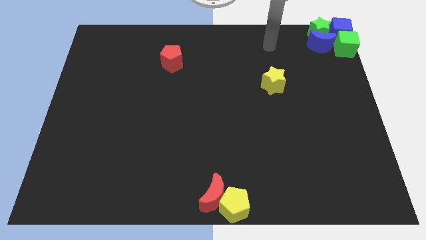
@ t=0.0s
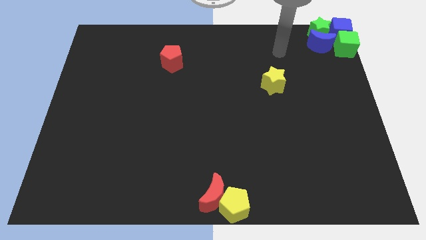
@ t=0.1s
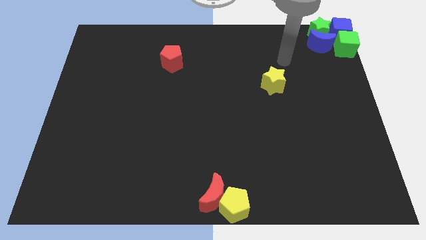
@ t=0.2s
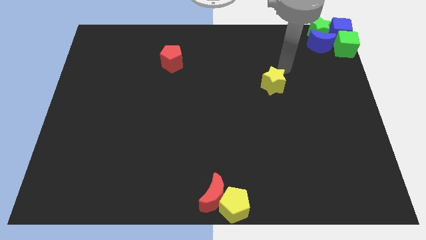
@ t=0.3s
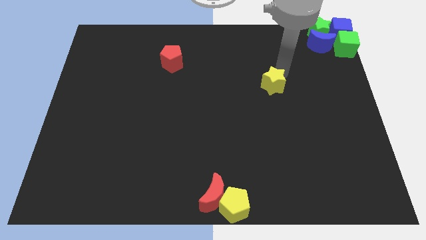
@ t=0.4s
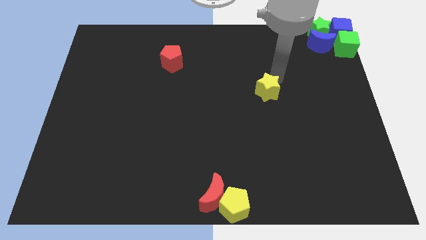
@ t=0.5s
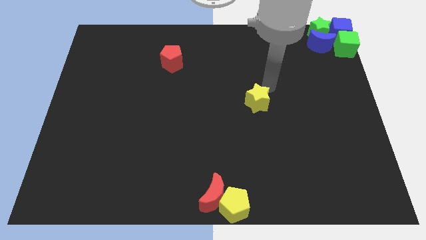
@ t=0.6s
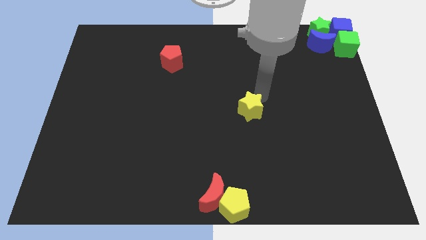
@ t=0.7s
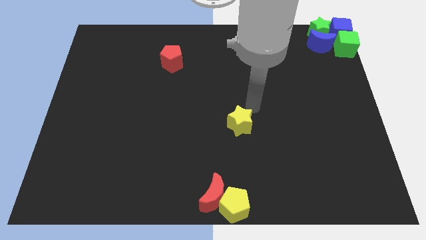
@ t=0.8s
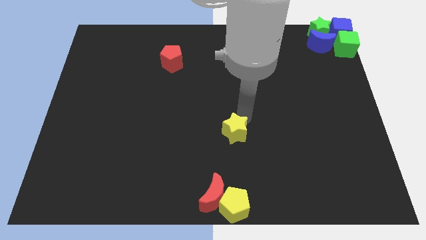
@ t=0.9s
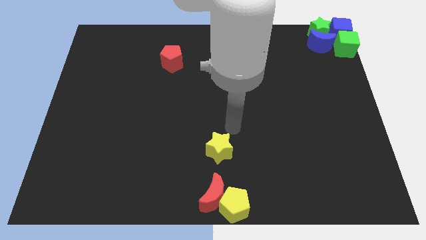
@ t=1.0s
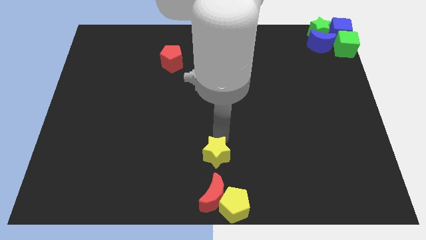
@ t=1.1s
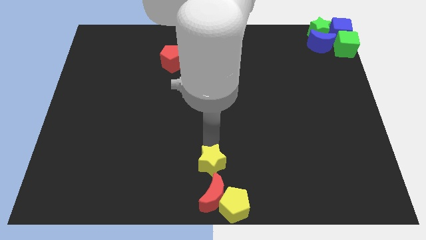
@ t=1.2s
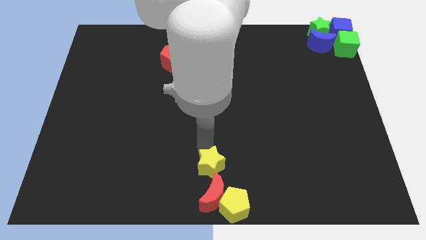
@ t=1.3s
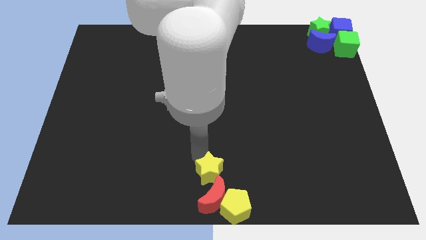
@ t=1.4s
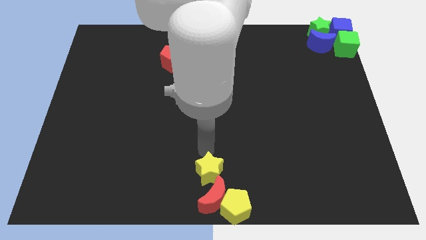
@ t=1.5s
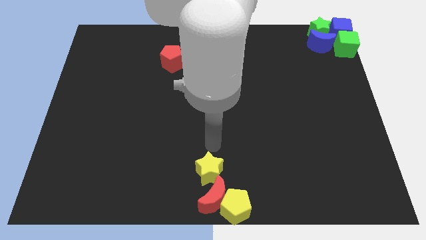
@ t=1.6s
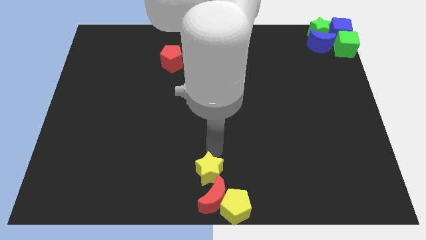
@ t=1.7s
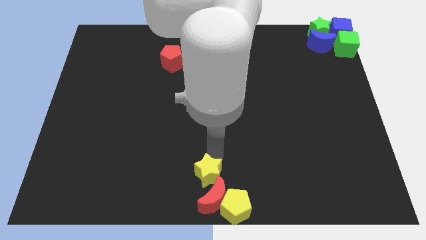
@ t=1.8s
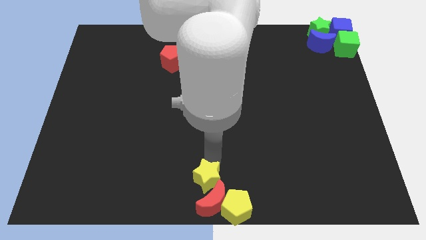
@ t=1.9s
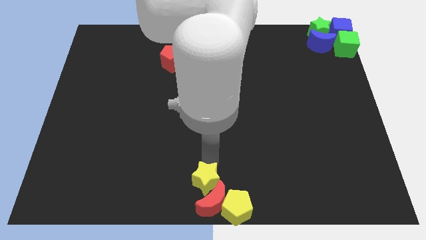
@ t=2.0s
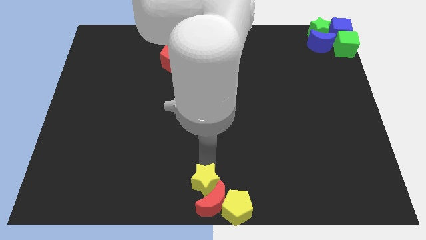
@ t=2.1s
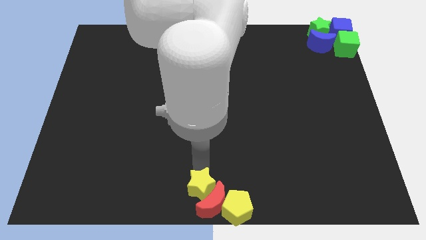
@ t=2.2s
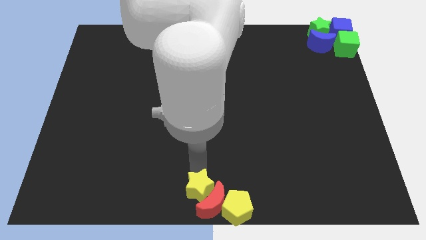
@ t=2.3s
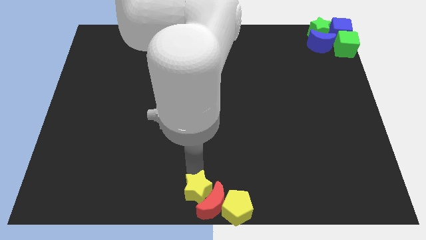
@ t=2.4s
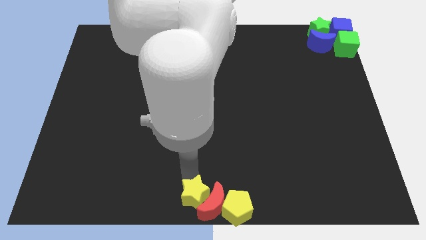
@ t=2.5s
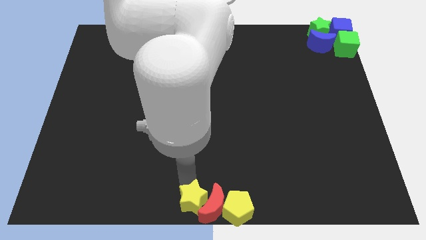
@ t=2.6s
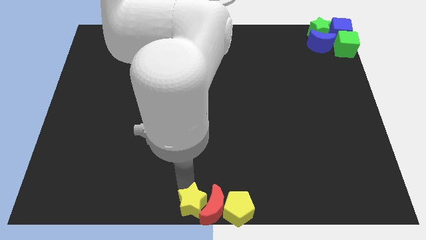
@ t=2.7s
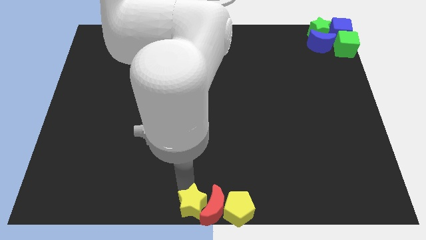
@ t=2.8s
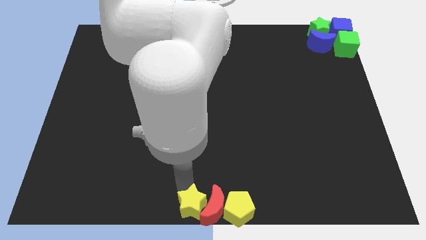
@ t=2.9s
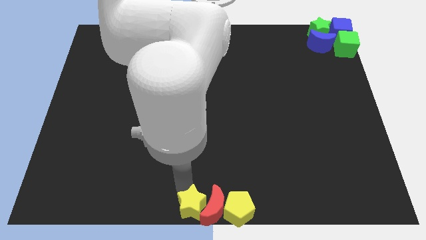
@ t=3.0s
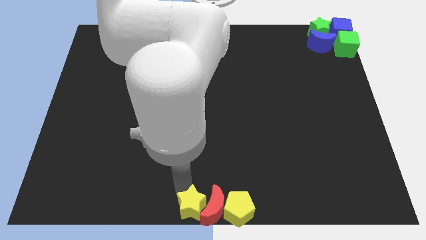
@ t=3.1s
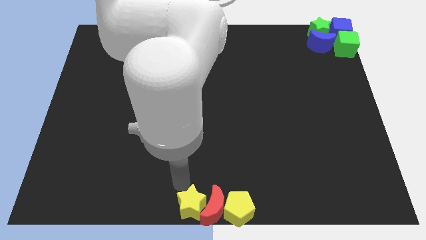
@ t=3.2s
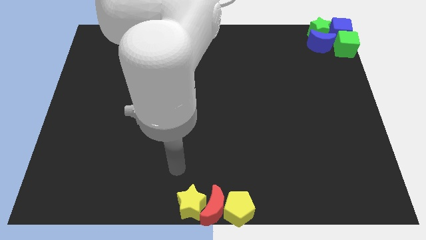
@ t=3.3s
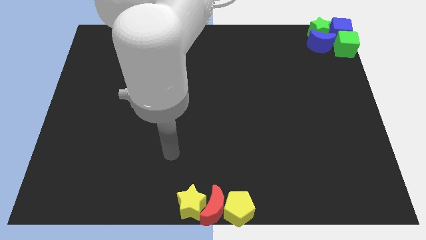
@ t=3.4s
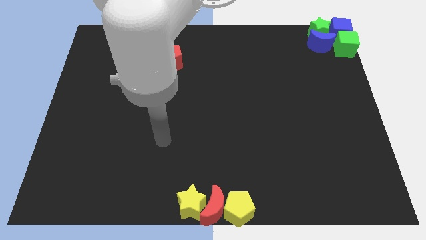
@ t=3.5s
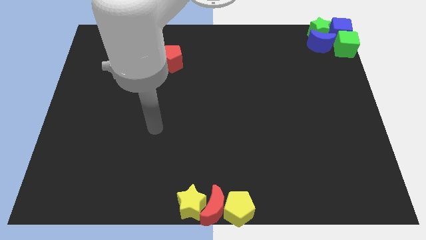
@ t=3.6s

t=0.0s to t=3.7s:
move the yellow star to the bottom center of the board

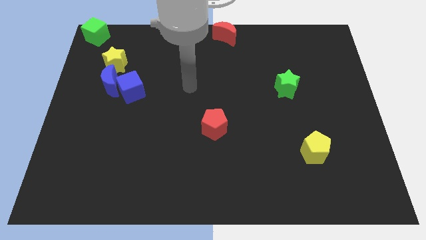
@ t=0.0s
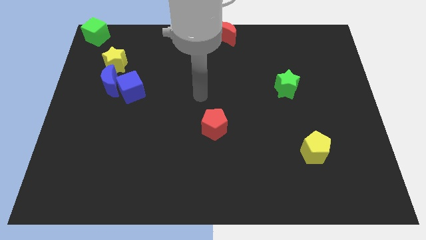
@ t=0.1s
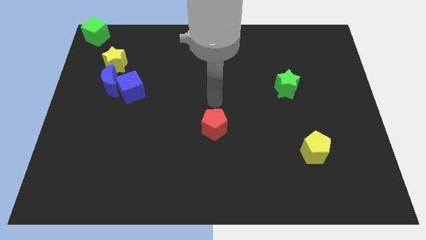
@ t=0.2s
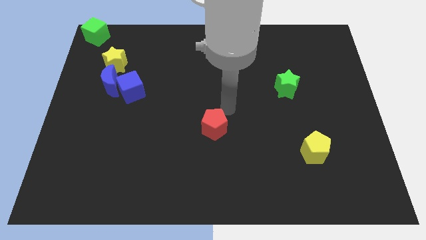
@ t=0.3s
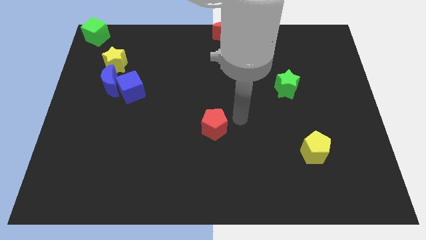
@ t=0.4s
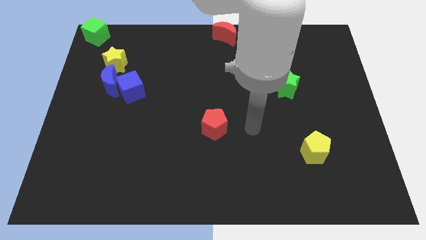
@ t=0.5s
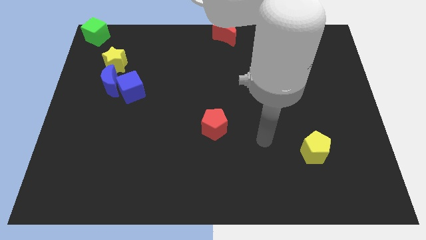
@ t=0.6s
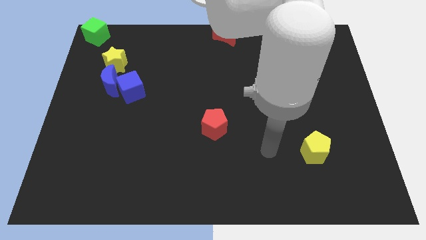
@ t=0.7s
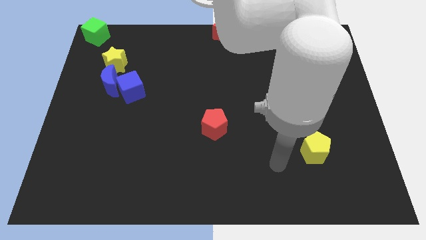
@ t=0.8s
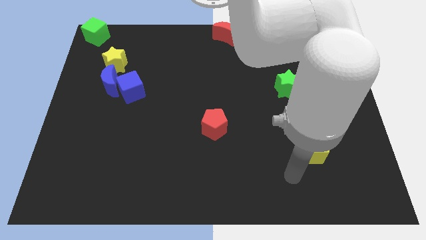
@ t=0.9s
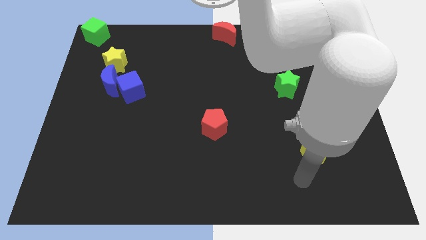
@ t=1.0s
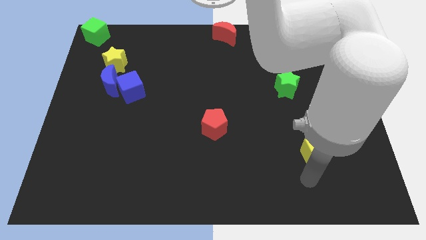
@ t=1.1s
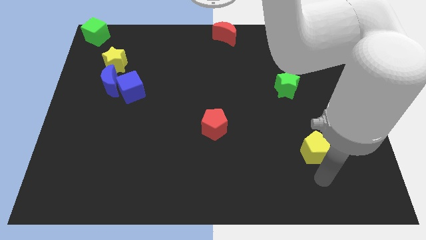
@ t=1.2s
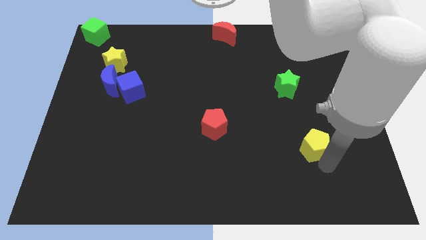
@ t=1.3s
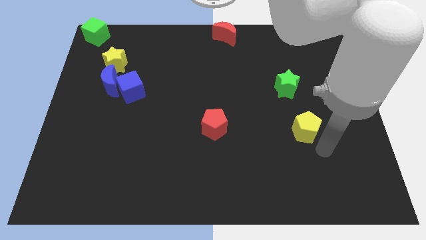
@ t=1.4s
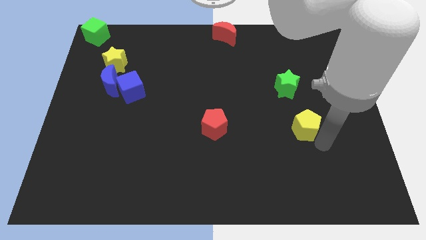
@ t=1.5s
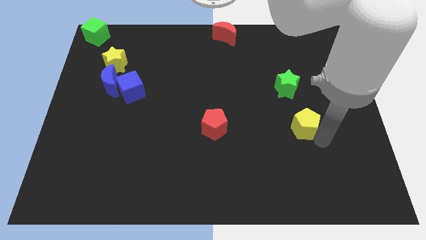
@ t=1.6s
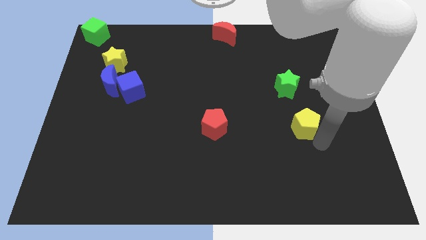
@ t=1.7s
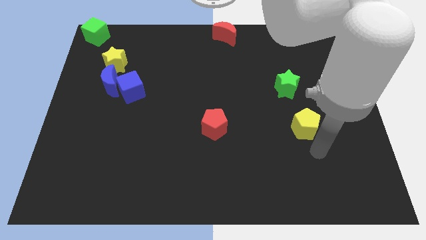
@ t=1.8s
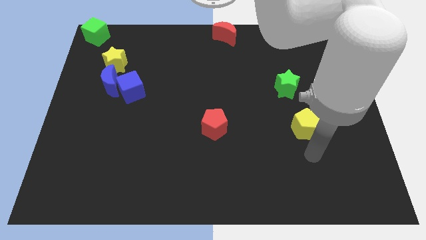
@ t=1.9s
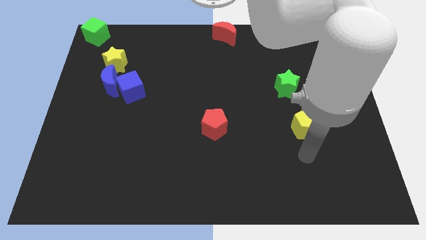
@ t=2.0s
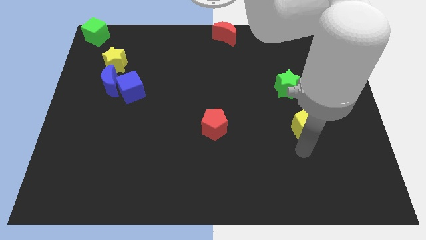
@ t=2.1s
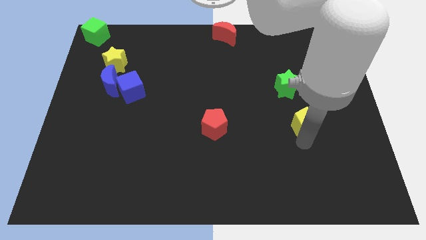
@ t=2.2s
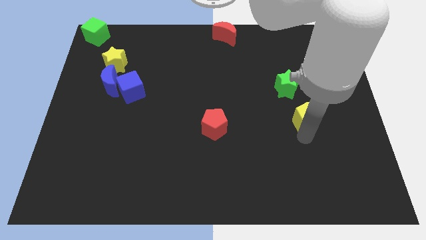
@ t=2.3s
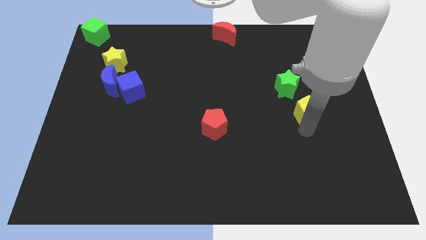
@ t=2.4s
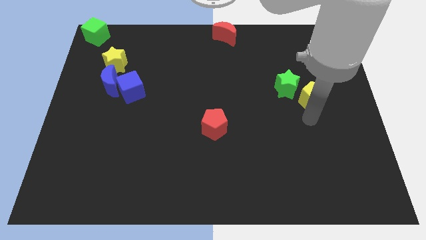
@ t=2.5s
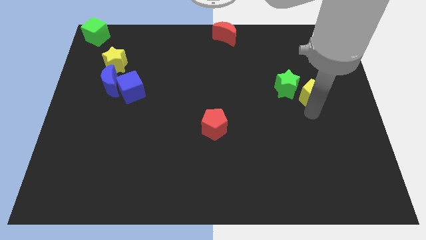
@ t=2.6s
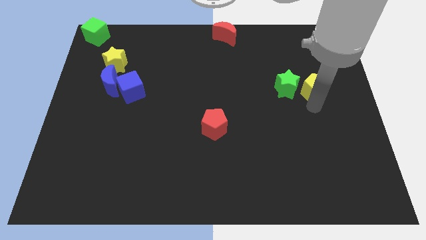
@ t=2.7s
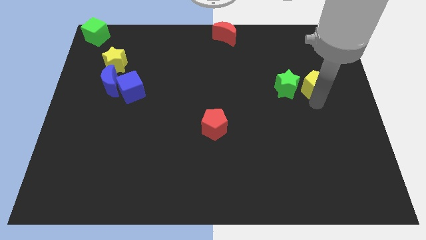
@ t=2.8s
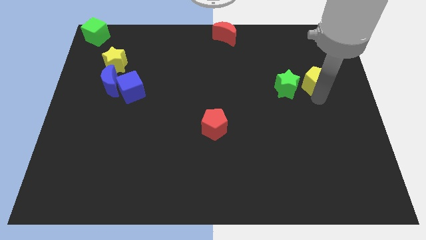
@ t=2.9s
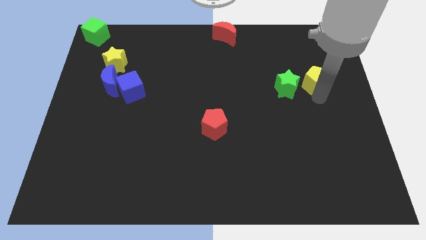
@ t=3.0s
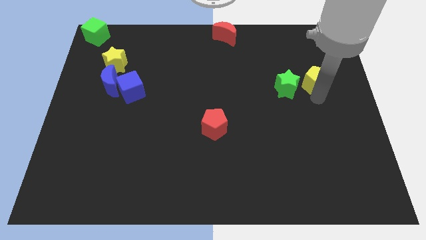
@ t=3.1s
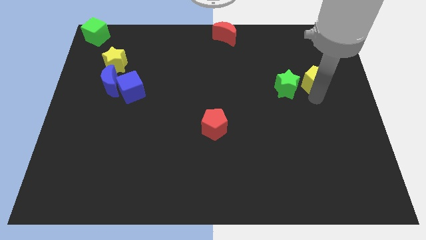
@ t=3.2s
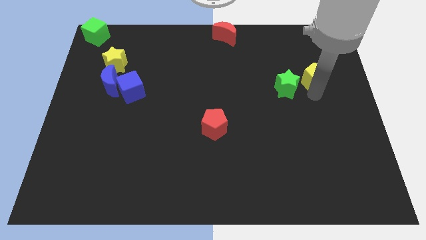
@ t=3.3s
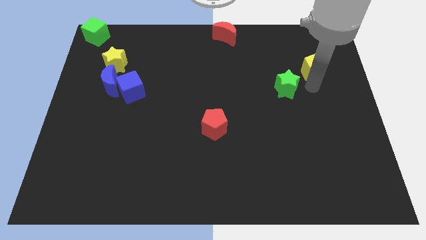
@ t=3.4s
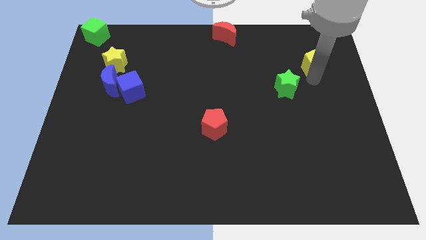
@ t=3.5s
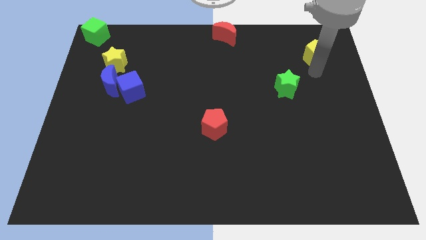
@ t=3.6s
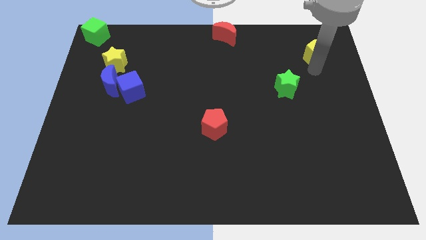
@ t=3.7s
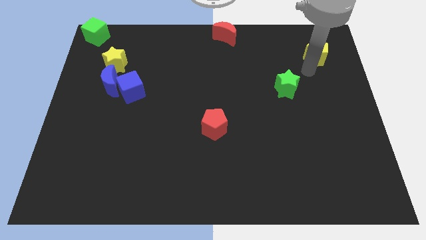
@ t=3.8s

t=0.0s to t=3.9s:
push the yellow pentagon upwards

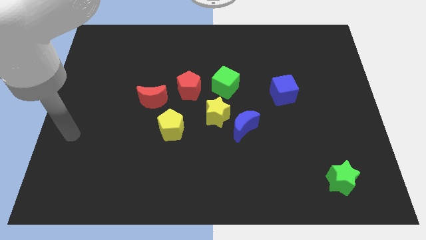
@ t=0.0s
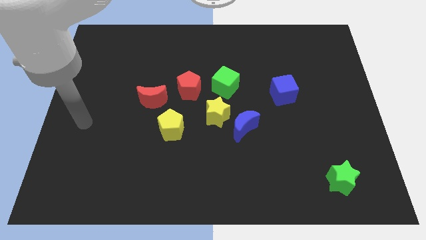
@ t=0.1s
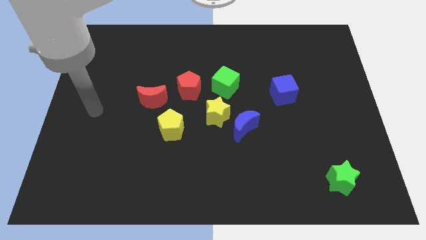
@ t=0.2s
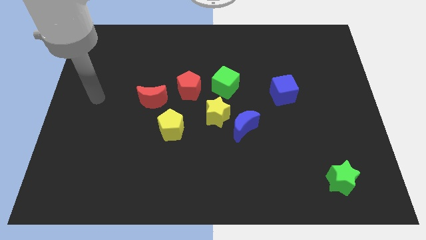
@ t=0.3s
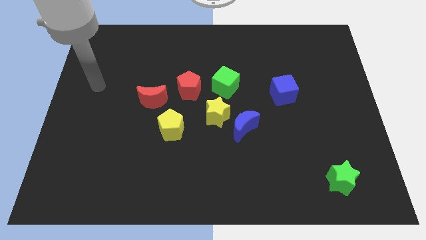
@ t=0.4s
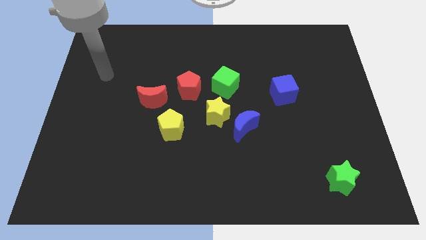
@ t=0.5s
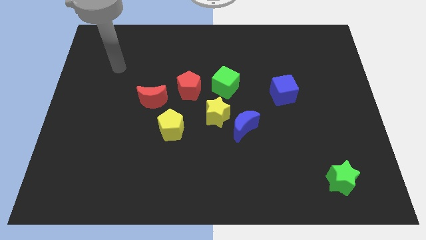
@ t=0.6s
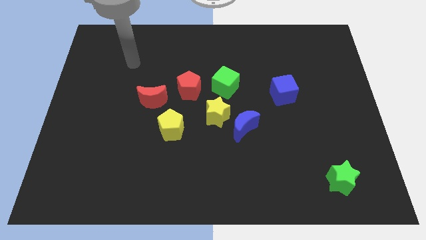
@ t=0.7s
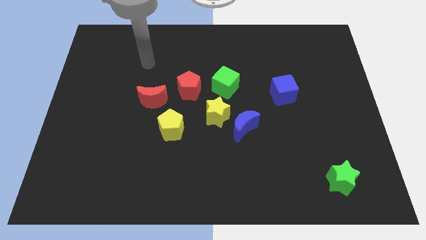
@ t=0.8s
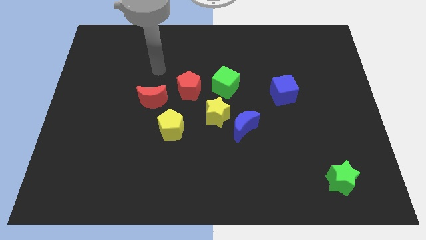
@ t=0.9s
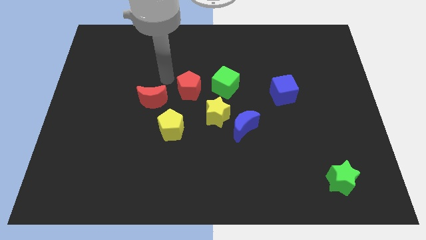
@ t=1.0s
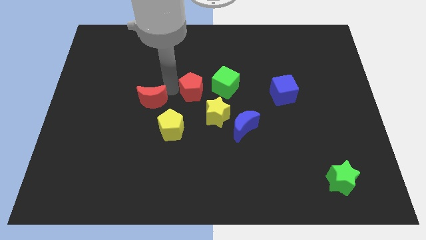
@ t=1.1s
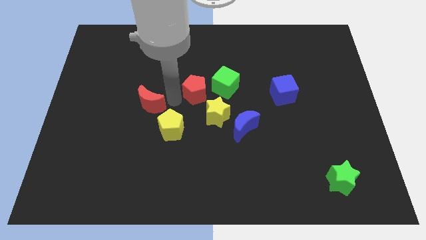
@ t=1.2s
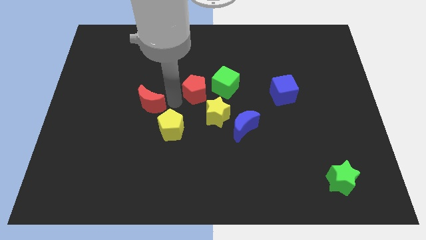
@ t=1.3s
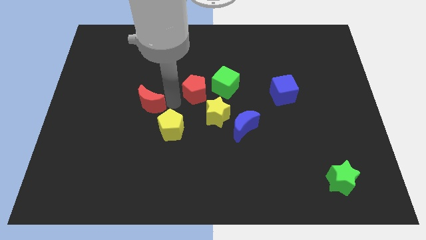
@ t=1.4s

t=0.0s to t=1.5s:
place arm in between red blocks
